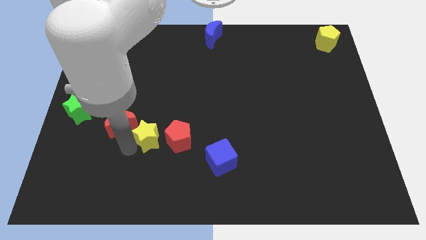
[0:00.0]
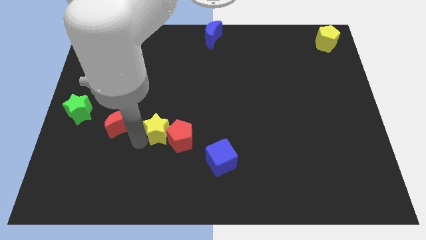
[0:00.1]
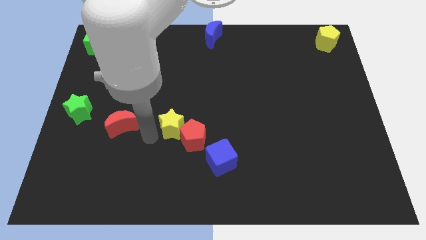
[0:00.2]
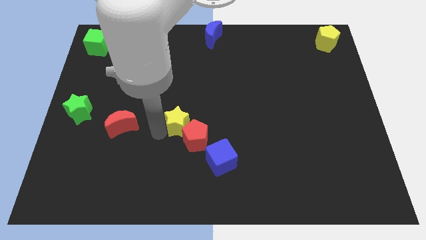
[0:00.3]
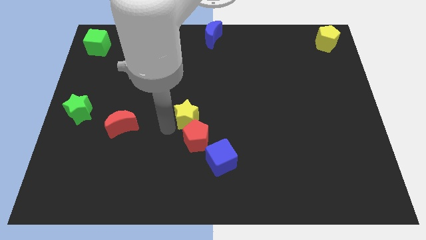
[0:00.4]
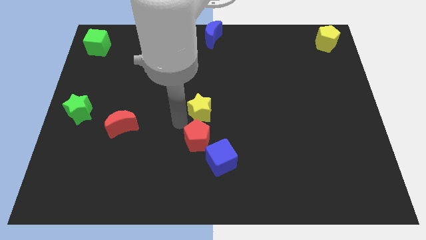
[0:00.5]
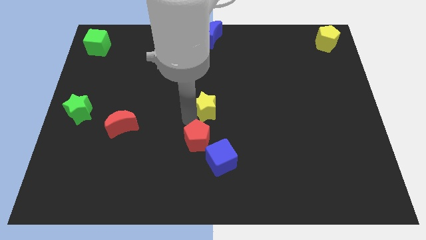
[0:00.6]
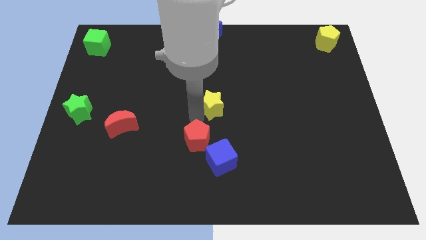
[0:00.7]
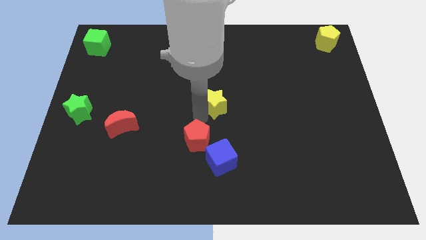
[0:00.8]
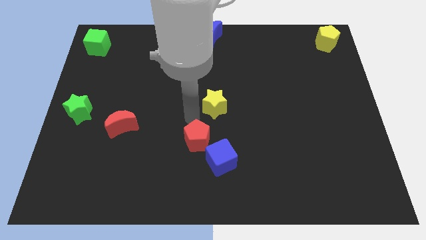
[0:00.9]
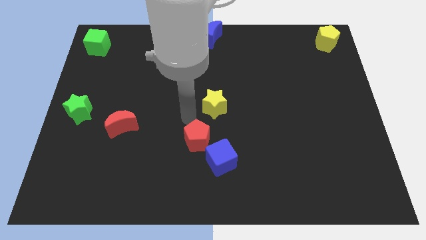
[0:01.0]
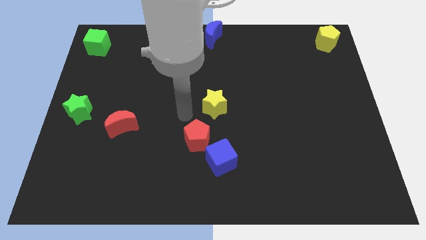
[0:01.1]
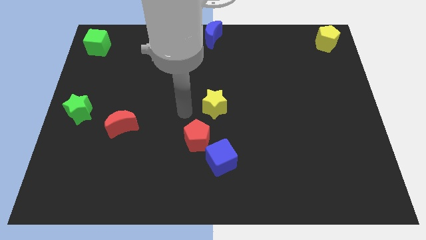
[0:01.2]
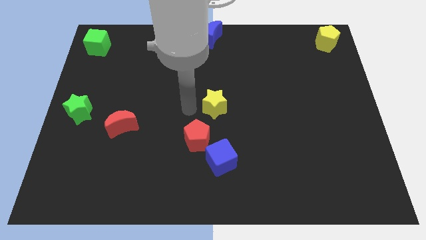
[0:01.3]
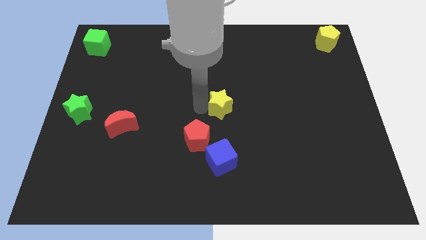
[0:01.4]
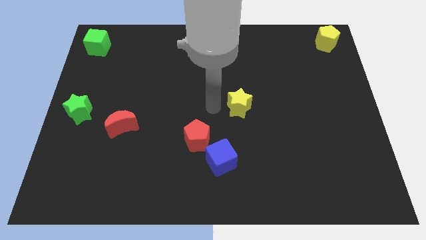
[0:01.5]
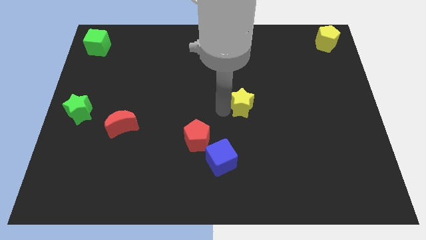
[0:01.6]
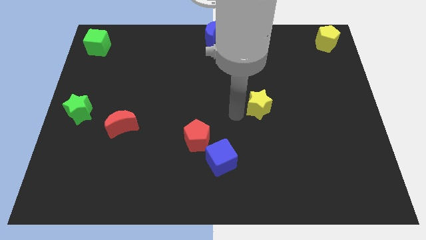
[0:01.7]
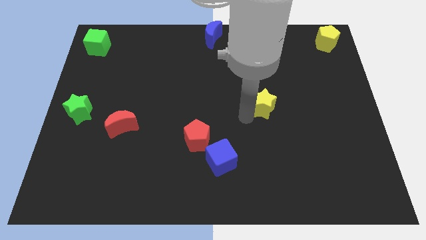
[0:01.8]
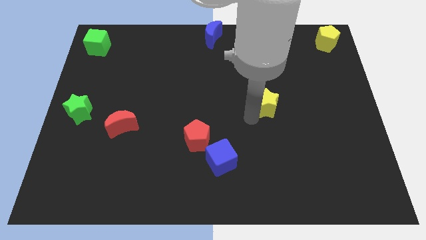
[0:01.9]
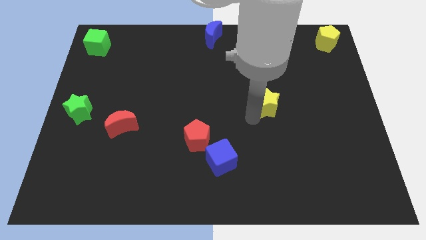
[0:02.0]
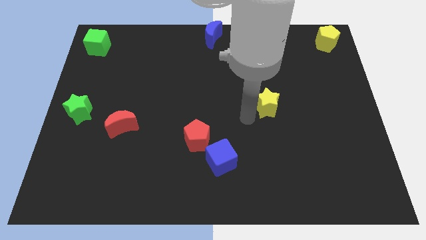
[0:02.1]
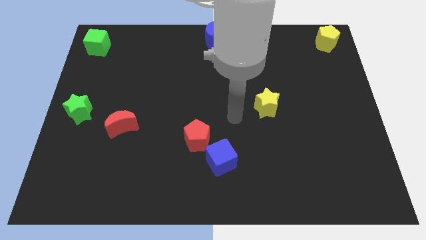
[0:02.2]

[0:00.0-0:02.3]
move yellow star apart from the middle of two red blocks

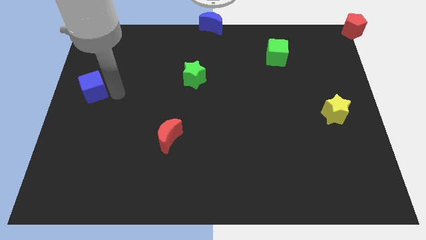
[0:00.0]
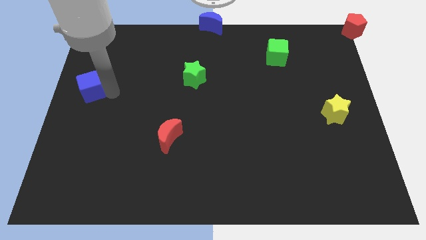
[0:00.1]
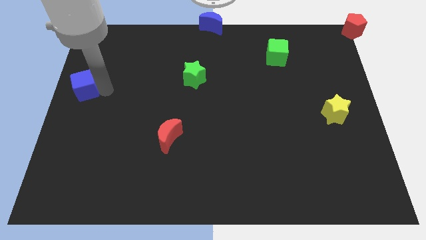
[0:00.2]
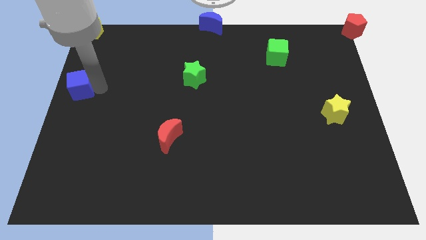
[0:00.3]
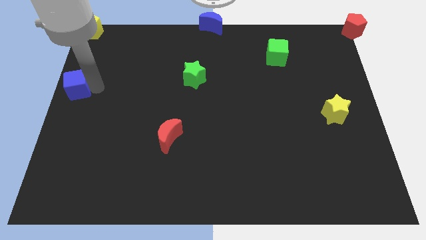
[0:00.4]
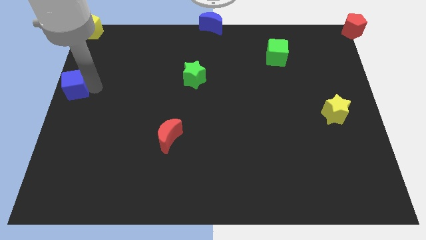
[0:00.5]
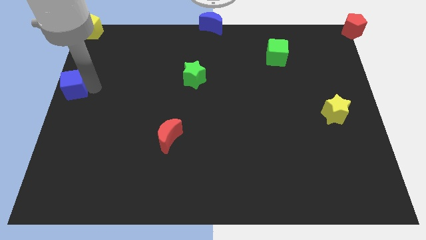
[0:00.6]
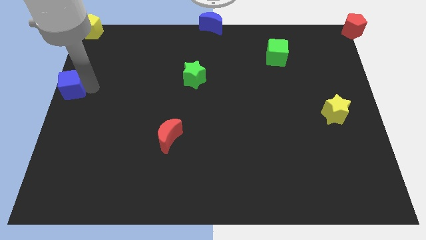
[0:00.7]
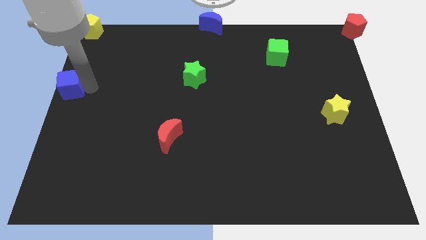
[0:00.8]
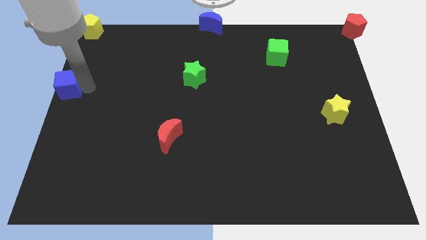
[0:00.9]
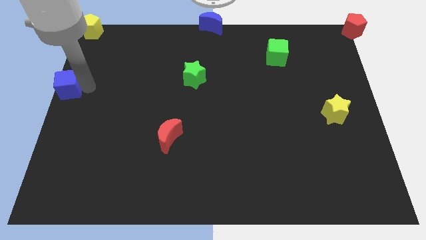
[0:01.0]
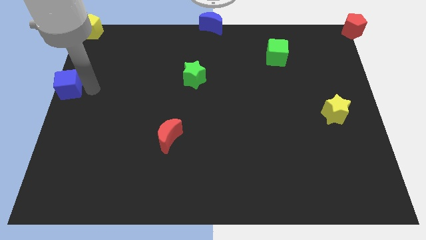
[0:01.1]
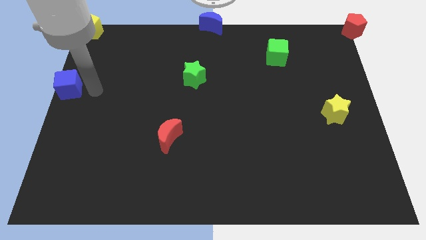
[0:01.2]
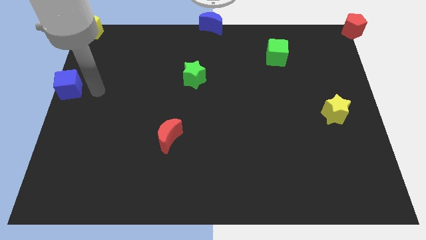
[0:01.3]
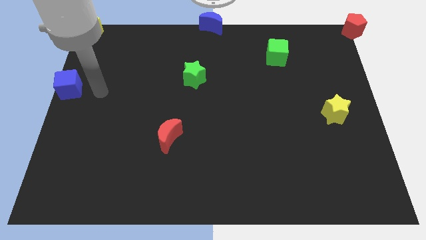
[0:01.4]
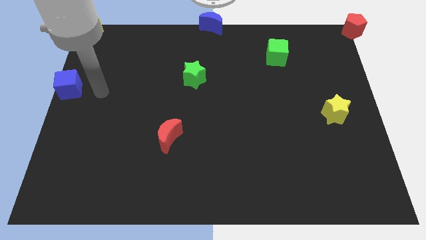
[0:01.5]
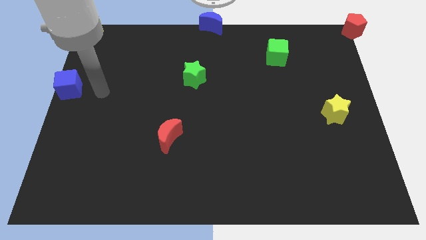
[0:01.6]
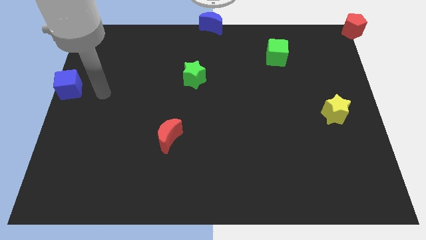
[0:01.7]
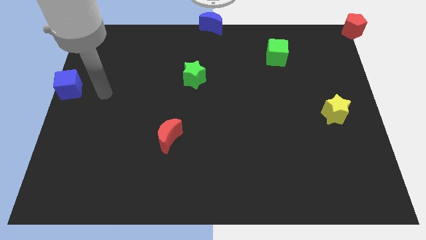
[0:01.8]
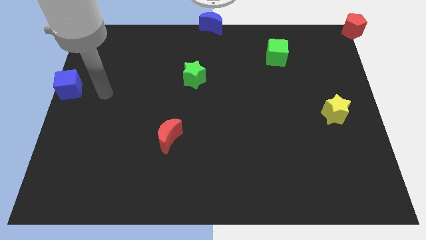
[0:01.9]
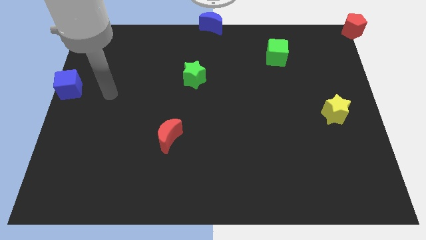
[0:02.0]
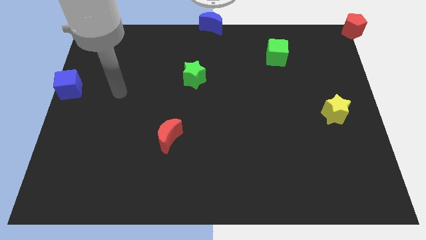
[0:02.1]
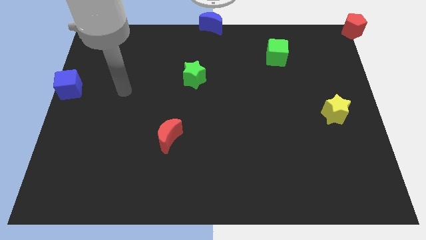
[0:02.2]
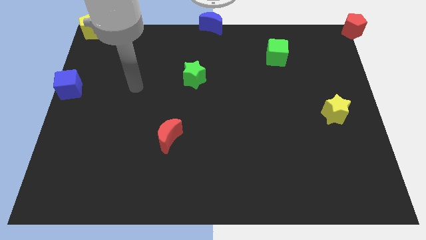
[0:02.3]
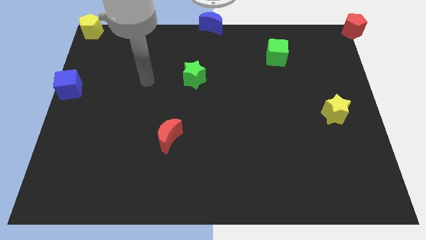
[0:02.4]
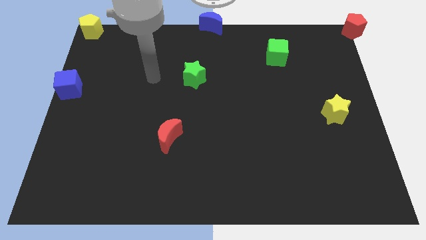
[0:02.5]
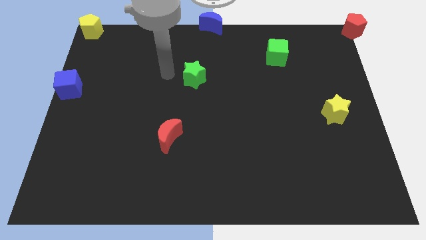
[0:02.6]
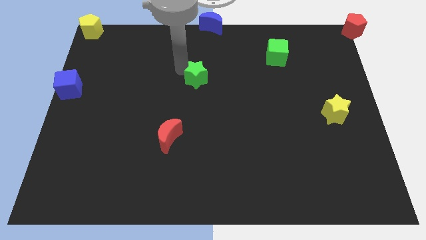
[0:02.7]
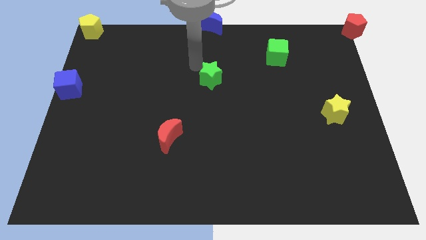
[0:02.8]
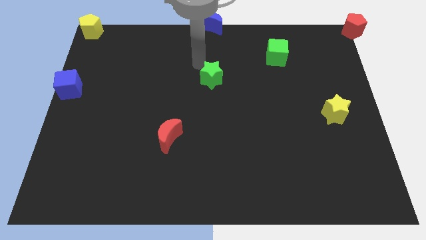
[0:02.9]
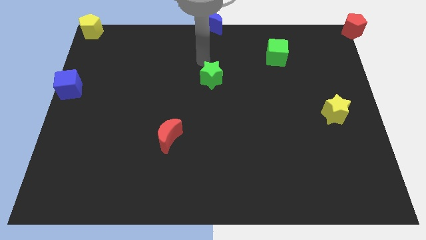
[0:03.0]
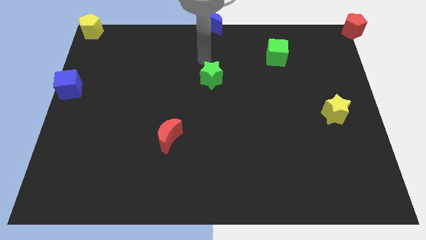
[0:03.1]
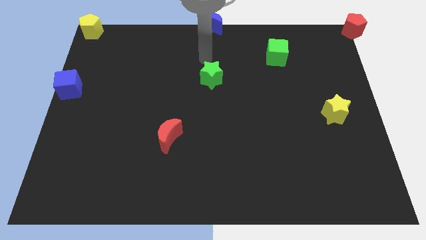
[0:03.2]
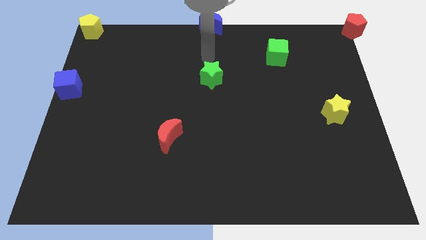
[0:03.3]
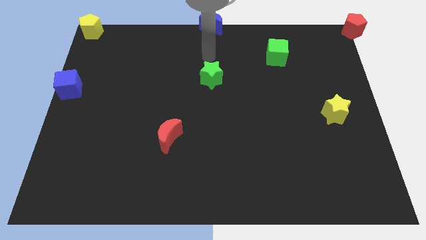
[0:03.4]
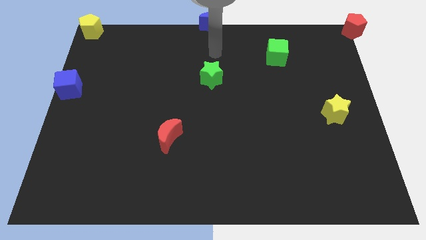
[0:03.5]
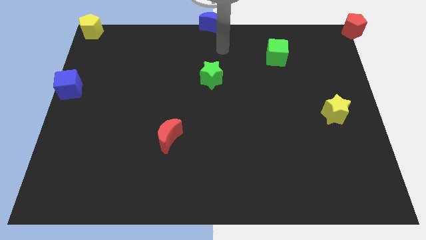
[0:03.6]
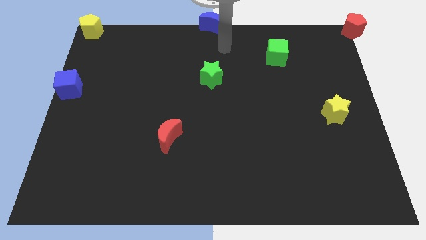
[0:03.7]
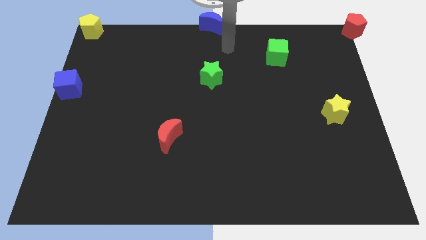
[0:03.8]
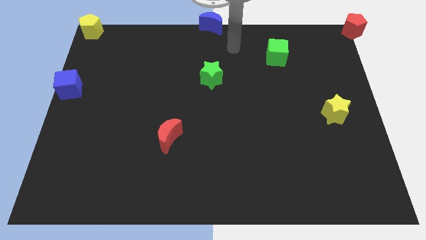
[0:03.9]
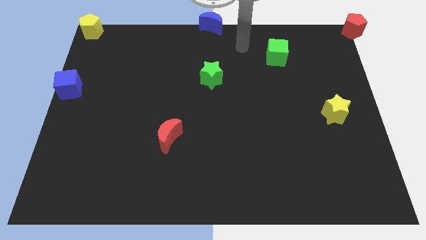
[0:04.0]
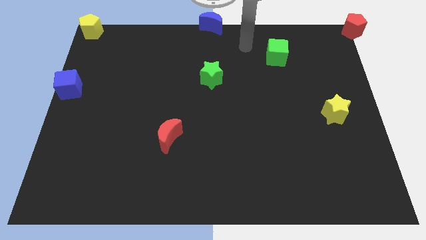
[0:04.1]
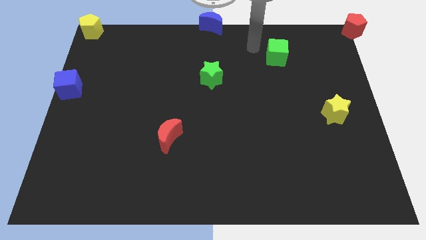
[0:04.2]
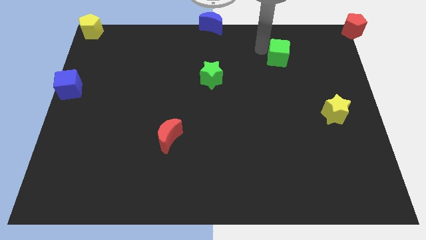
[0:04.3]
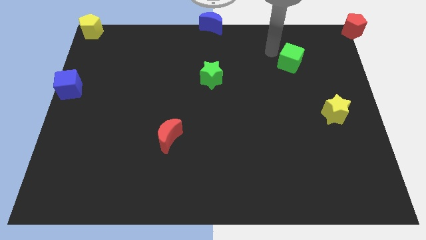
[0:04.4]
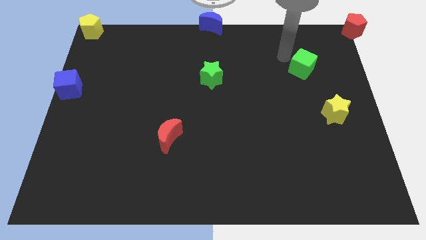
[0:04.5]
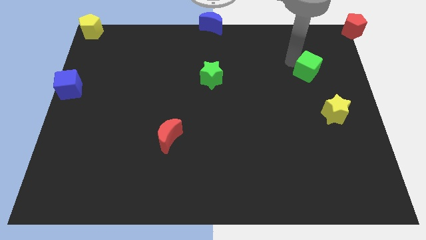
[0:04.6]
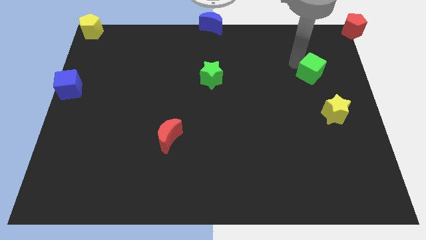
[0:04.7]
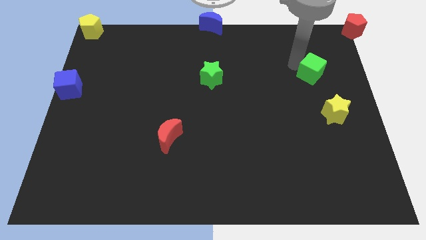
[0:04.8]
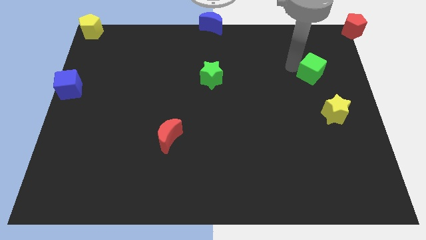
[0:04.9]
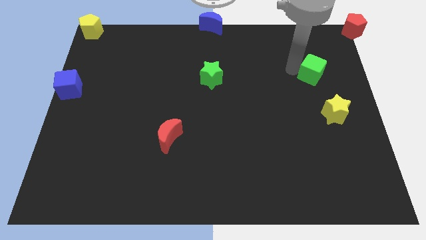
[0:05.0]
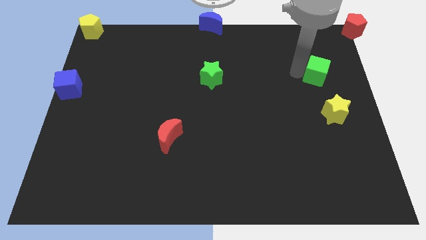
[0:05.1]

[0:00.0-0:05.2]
place the blue cube at the bottom of the yellow pentagon

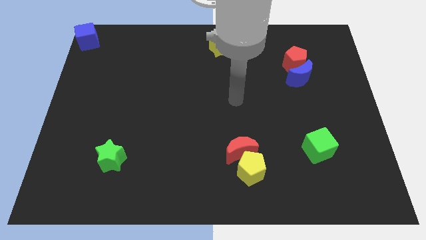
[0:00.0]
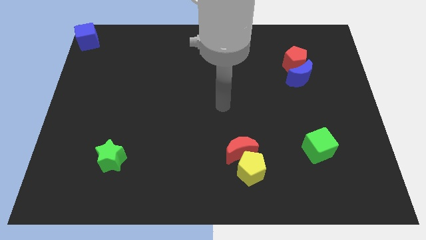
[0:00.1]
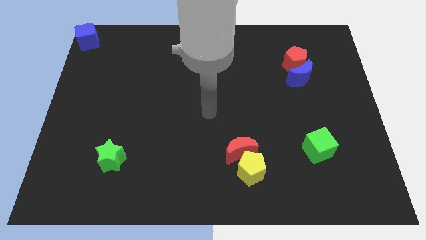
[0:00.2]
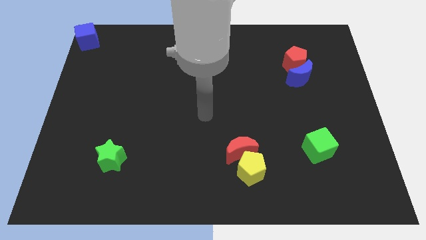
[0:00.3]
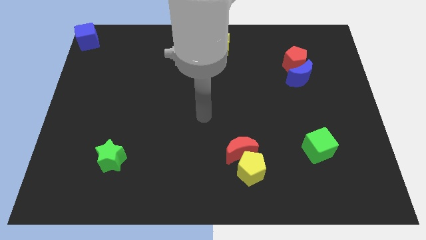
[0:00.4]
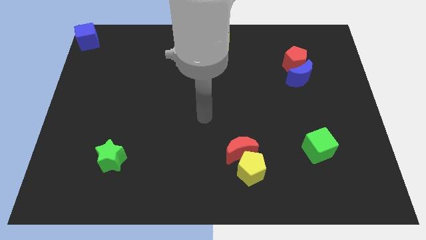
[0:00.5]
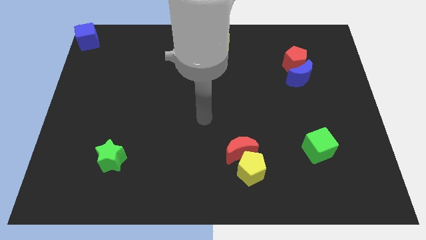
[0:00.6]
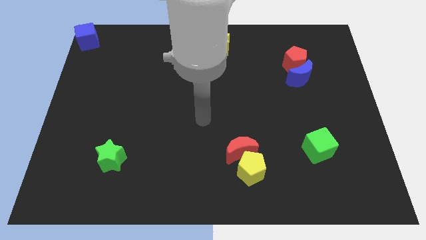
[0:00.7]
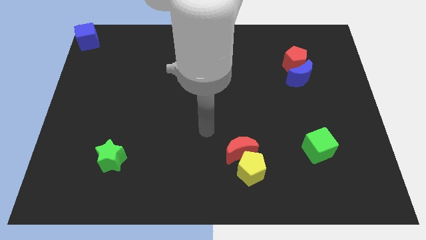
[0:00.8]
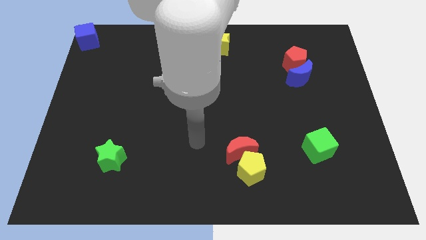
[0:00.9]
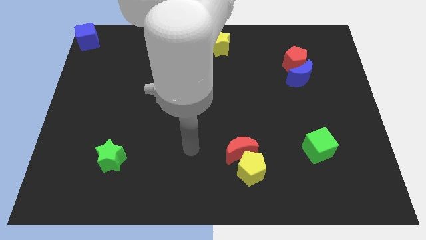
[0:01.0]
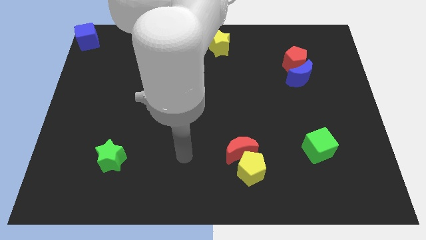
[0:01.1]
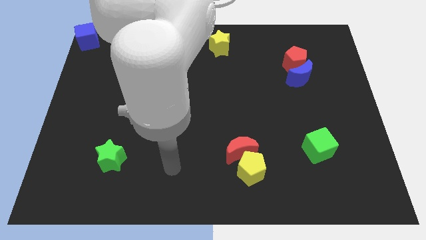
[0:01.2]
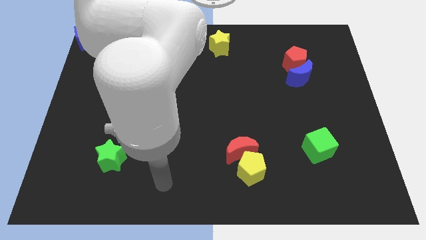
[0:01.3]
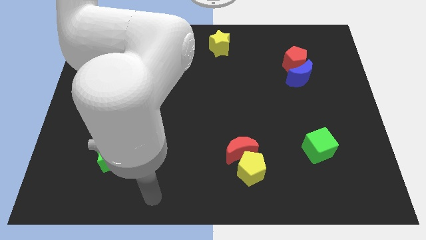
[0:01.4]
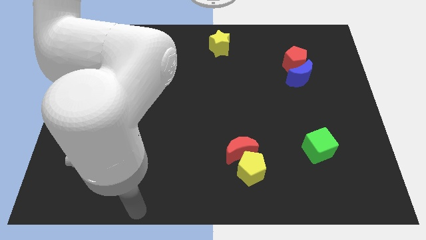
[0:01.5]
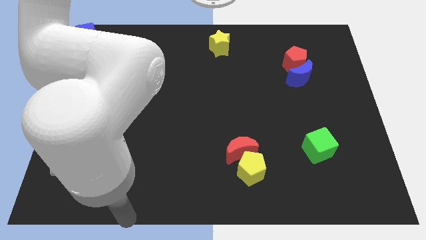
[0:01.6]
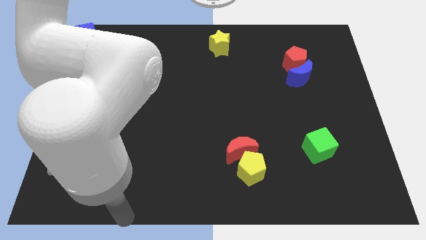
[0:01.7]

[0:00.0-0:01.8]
move the arm towards the left bottom of the board

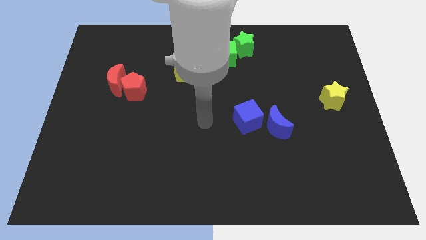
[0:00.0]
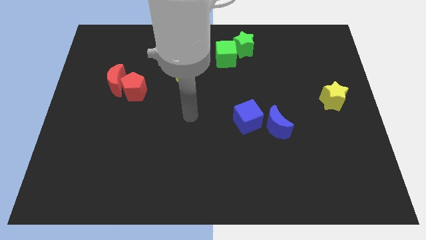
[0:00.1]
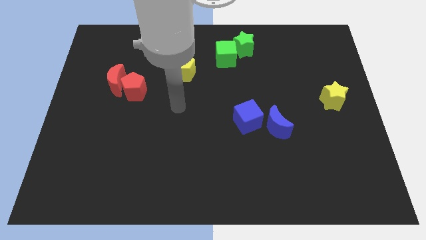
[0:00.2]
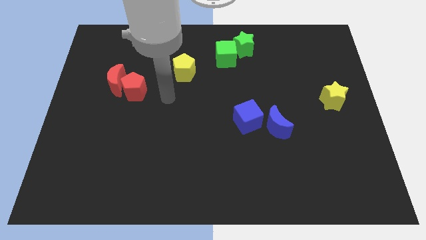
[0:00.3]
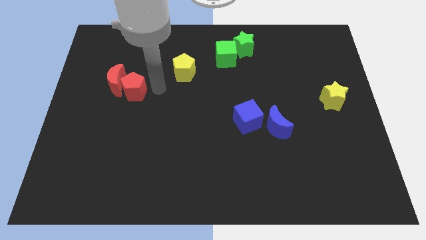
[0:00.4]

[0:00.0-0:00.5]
place your arm right side of the red pentagon
